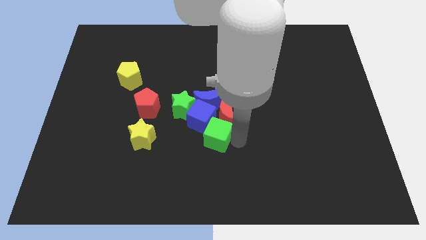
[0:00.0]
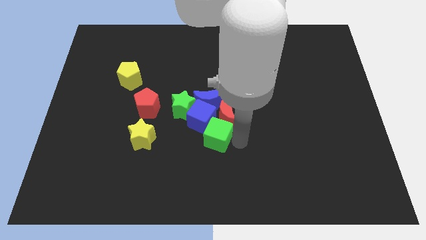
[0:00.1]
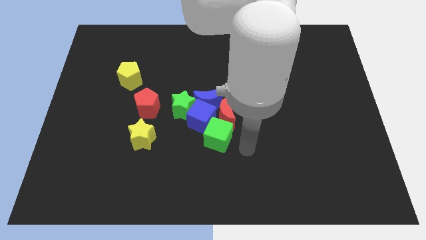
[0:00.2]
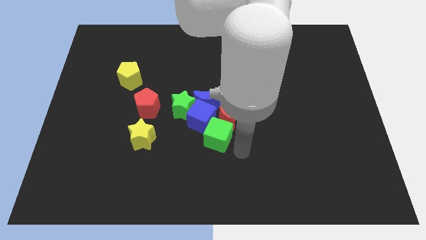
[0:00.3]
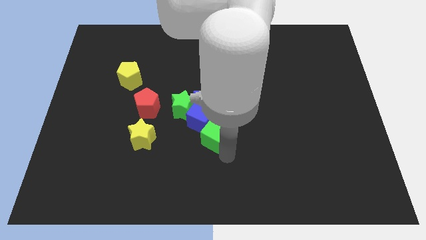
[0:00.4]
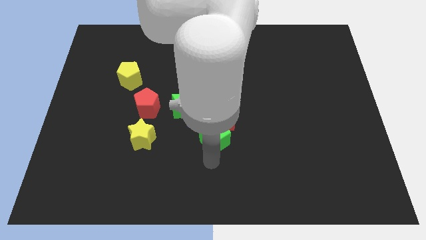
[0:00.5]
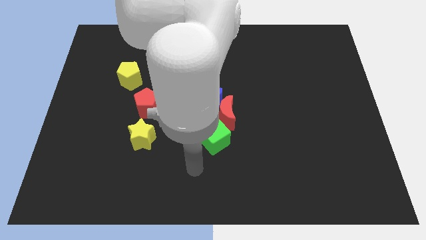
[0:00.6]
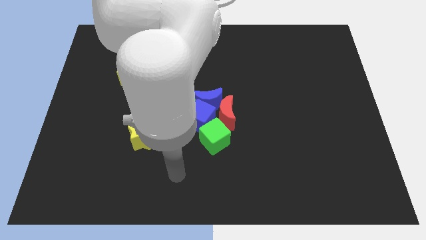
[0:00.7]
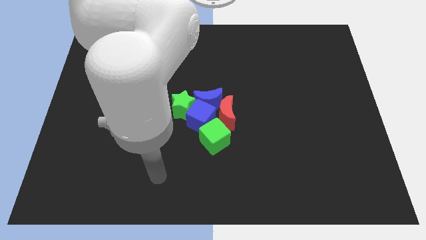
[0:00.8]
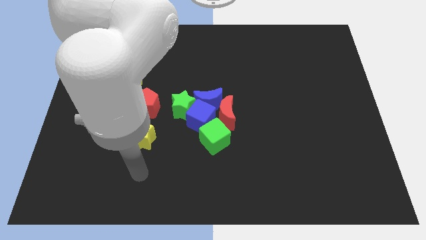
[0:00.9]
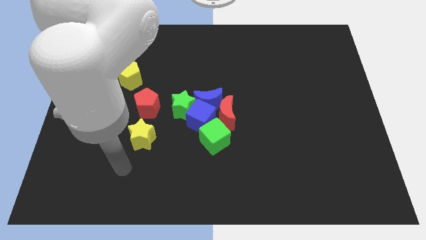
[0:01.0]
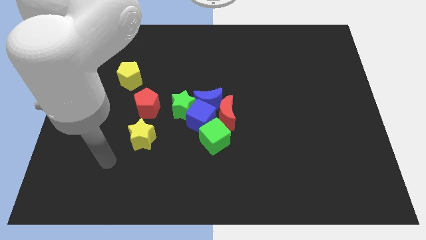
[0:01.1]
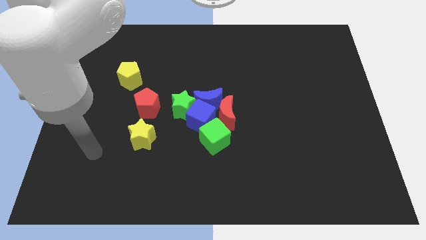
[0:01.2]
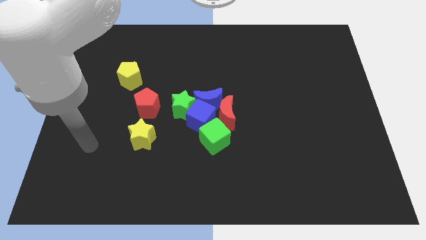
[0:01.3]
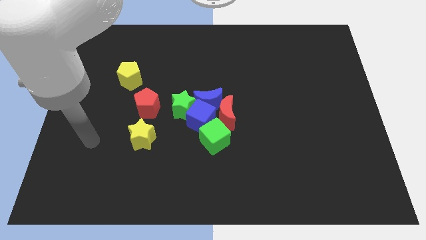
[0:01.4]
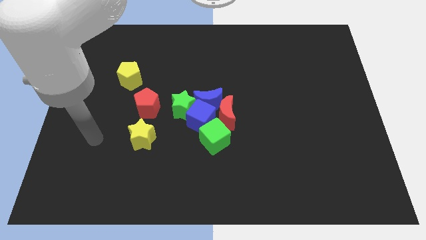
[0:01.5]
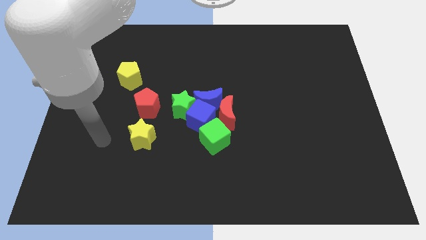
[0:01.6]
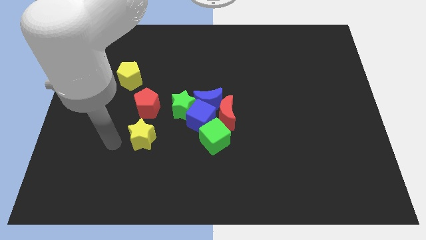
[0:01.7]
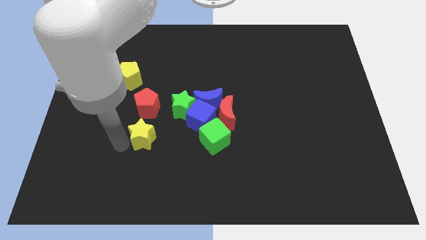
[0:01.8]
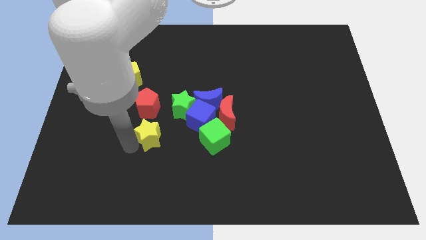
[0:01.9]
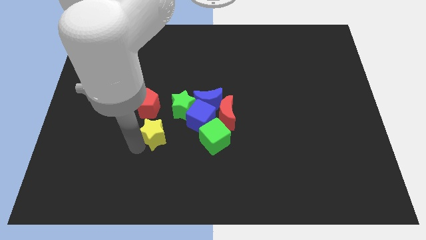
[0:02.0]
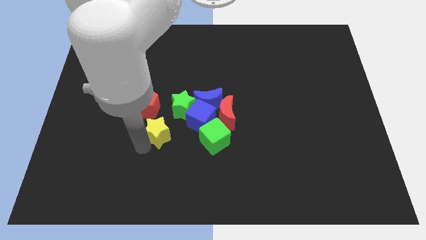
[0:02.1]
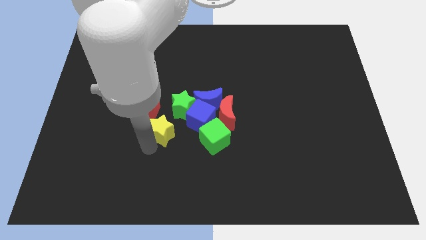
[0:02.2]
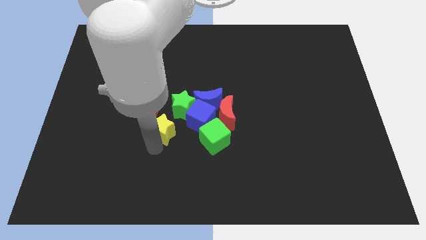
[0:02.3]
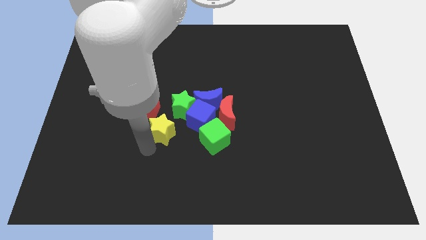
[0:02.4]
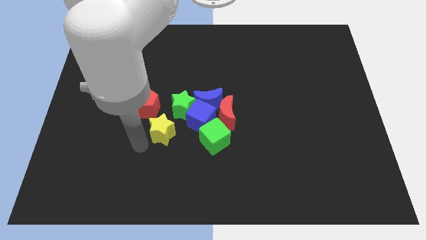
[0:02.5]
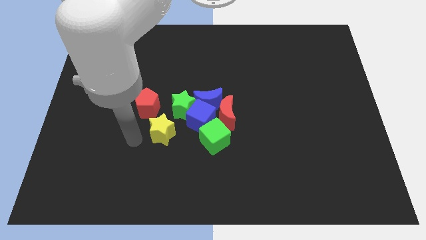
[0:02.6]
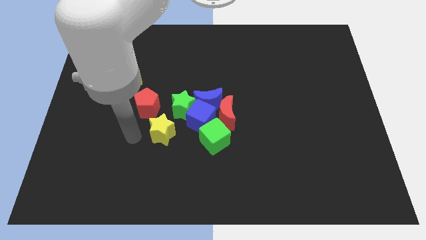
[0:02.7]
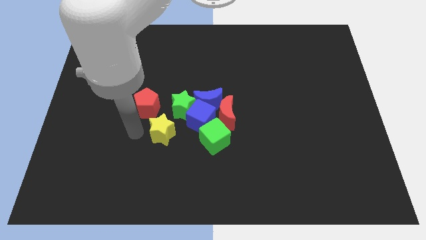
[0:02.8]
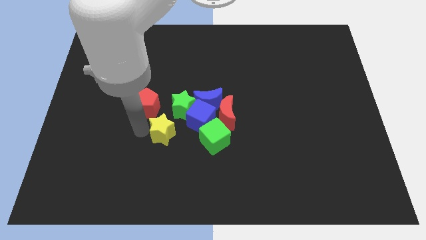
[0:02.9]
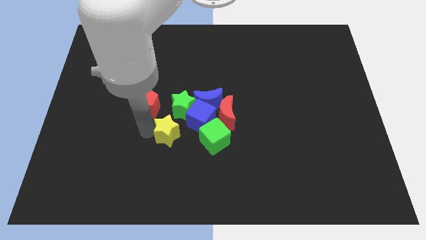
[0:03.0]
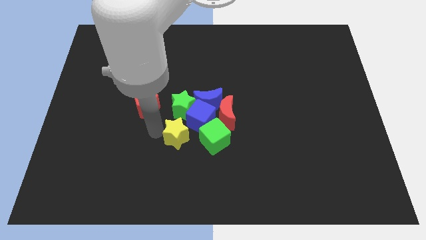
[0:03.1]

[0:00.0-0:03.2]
push the yellow star below to the green cube

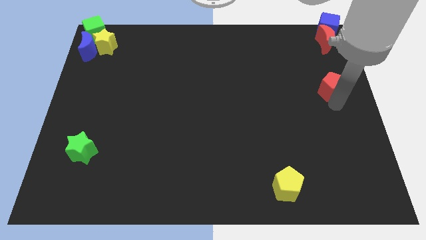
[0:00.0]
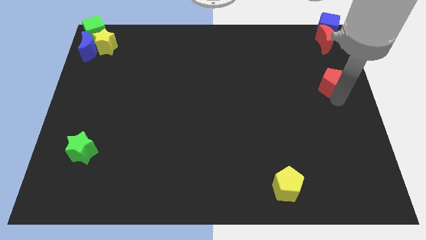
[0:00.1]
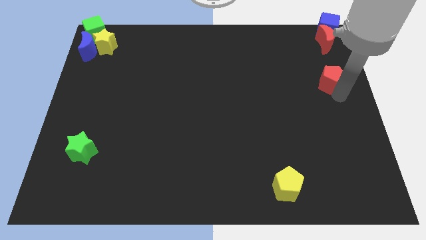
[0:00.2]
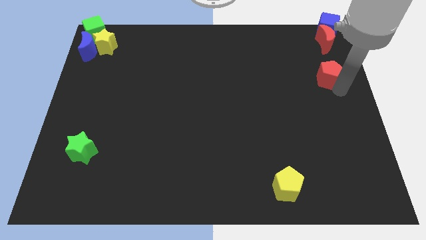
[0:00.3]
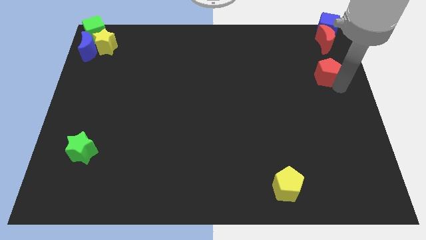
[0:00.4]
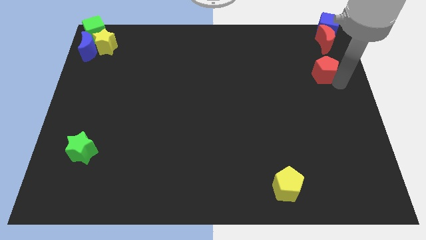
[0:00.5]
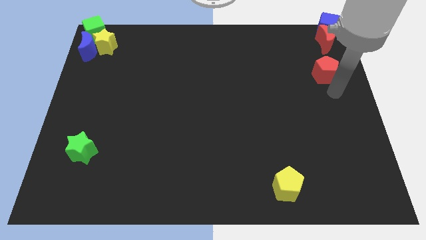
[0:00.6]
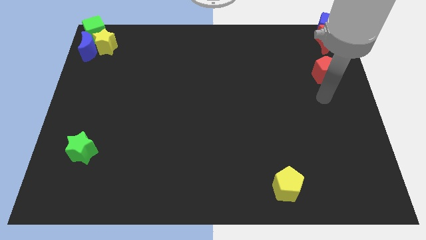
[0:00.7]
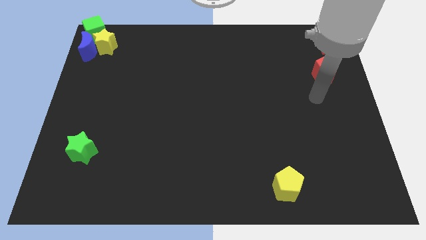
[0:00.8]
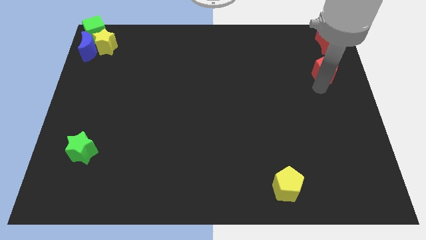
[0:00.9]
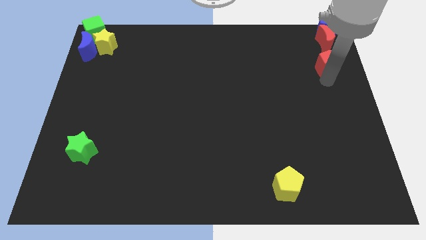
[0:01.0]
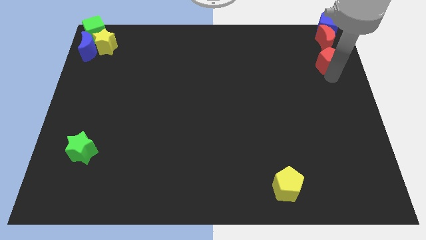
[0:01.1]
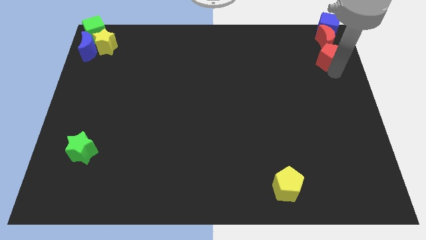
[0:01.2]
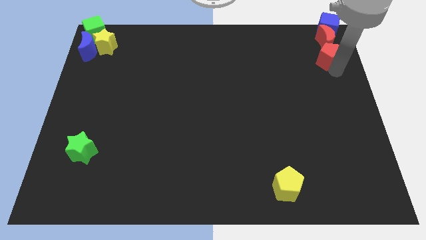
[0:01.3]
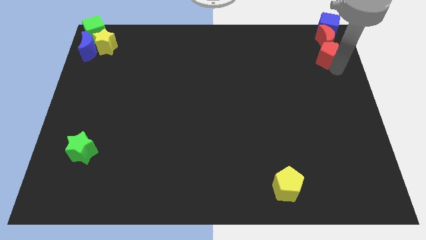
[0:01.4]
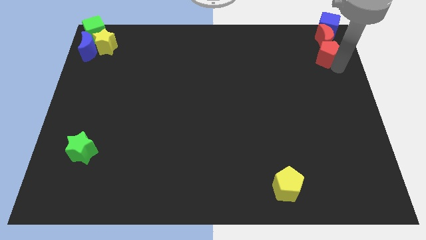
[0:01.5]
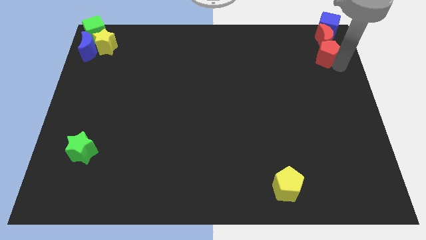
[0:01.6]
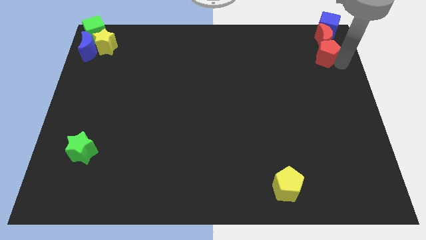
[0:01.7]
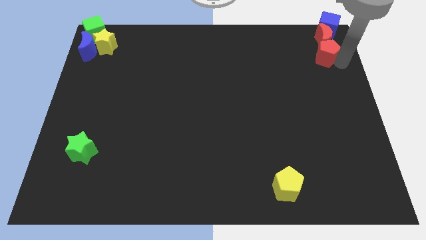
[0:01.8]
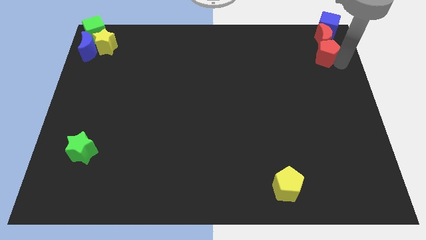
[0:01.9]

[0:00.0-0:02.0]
place the red pentagon at the bottom of the red crescent

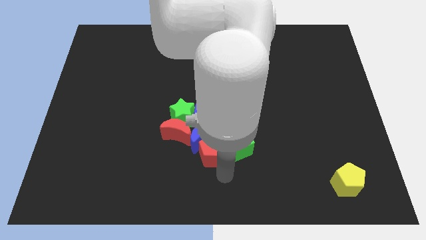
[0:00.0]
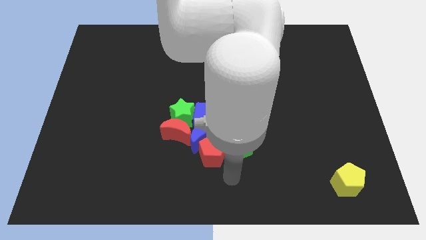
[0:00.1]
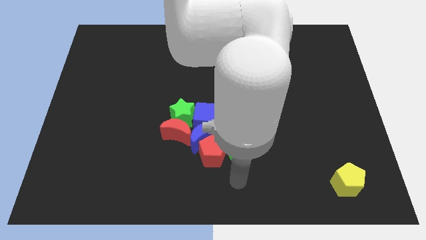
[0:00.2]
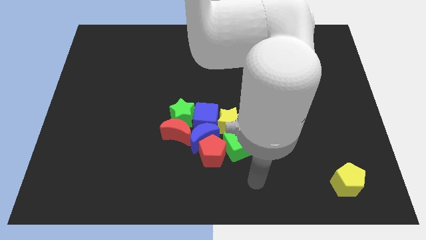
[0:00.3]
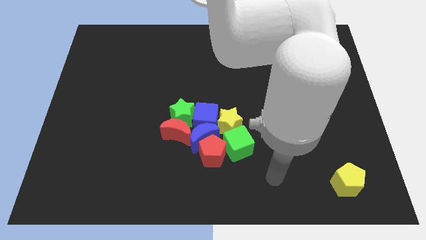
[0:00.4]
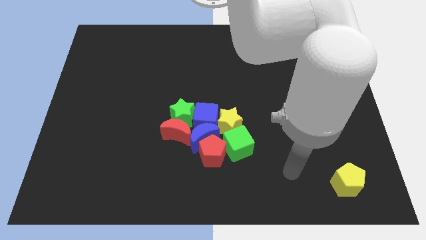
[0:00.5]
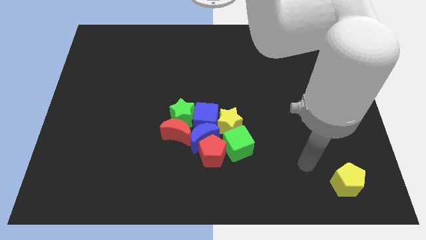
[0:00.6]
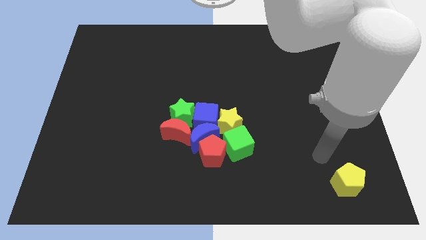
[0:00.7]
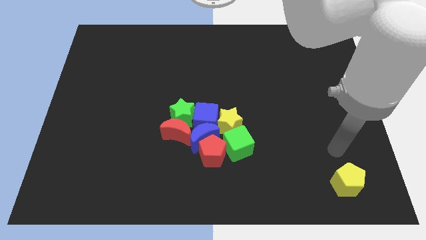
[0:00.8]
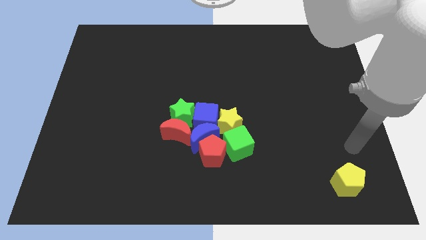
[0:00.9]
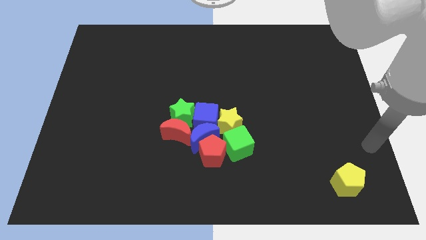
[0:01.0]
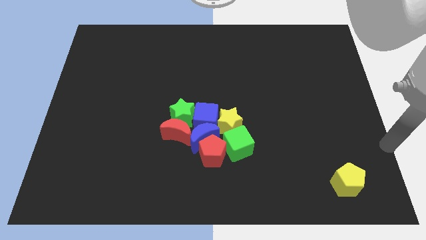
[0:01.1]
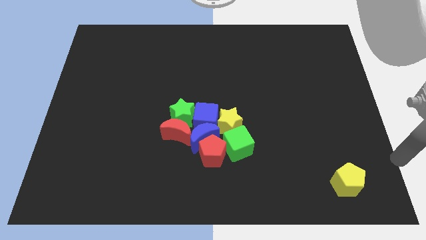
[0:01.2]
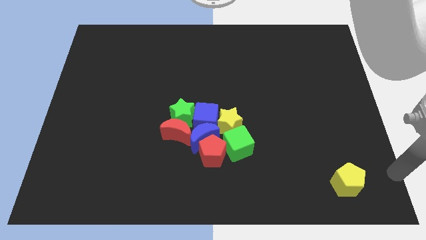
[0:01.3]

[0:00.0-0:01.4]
move the arm from bottom center to bottom right of the board

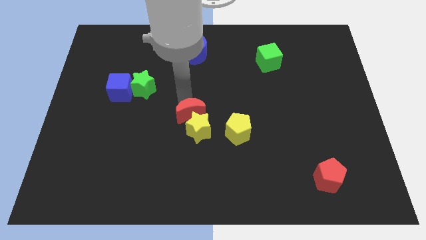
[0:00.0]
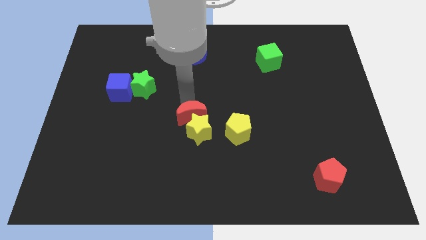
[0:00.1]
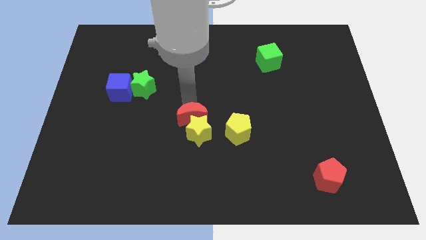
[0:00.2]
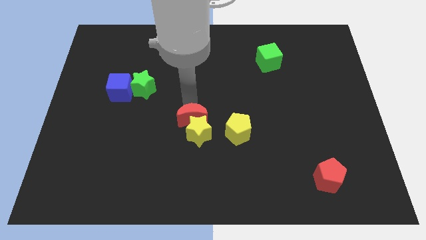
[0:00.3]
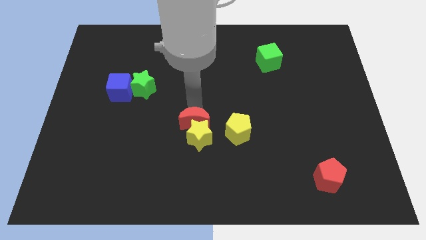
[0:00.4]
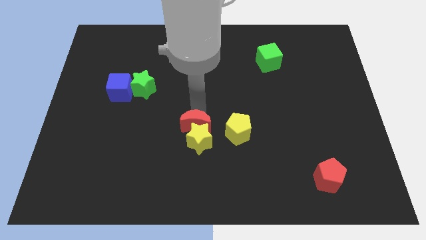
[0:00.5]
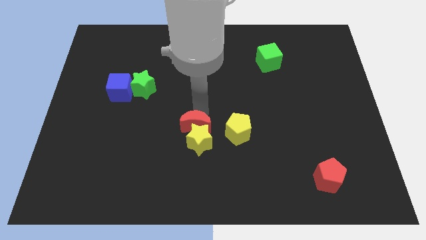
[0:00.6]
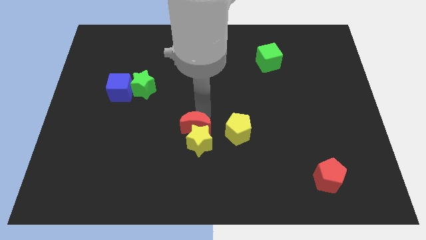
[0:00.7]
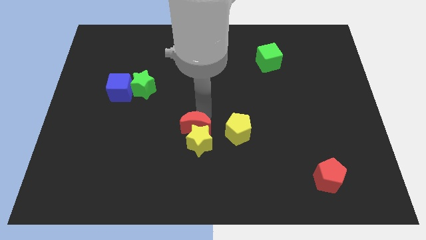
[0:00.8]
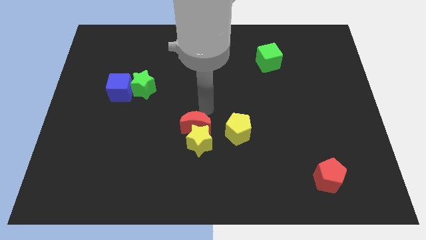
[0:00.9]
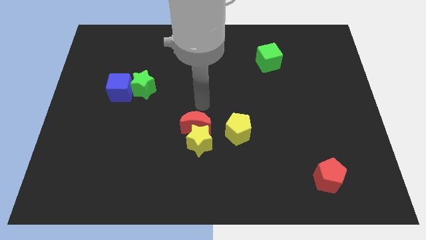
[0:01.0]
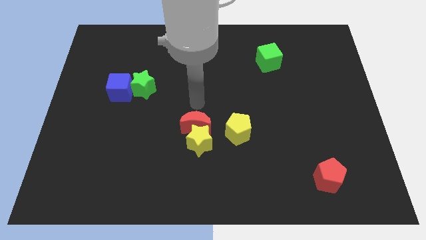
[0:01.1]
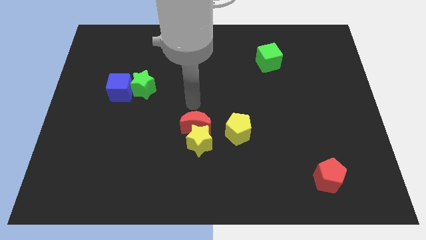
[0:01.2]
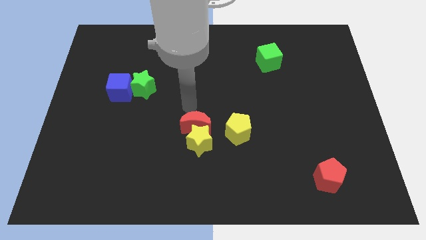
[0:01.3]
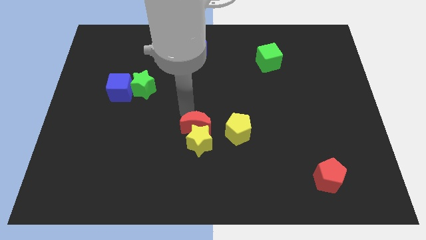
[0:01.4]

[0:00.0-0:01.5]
put the red crescent and yellow star to the left of the yellow pentagon

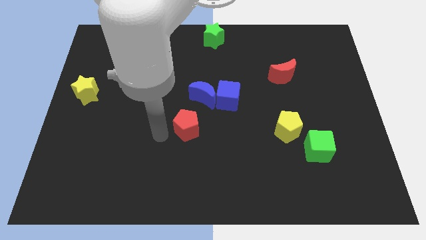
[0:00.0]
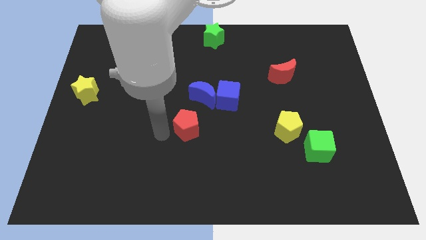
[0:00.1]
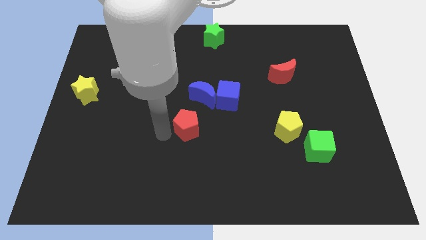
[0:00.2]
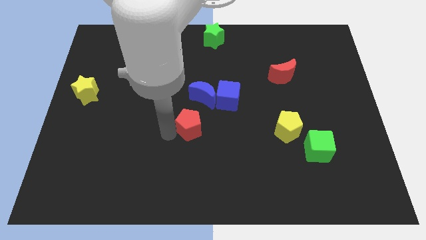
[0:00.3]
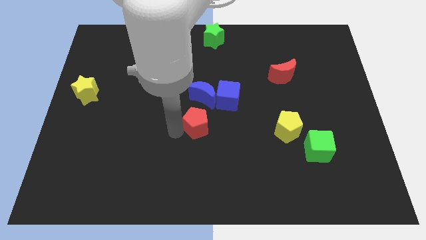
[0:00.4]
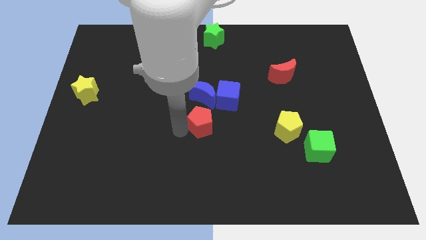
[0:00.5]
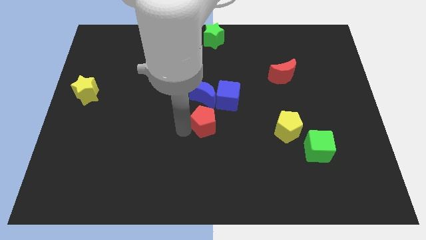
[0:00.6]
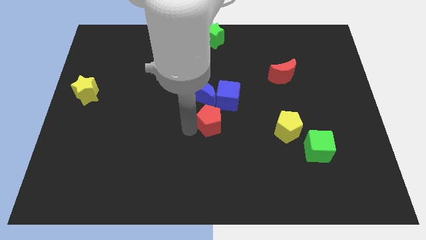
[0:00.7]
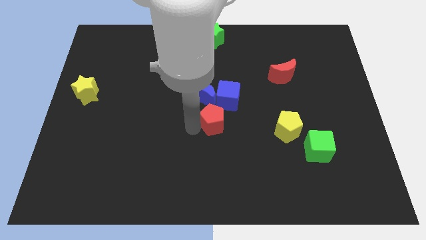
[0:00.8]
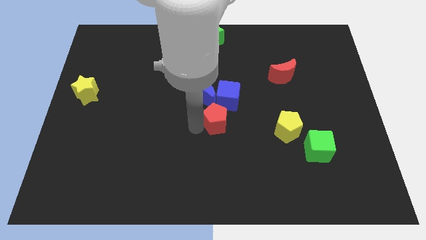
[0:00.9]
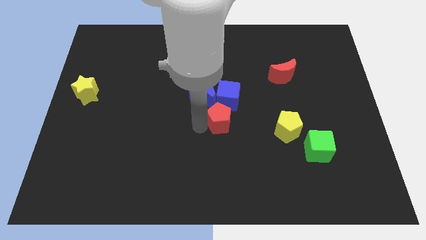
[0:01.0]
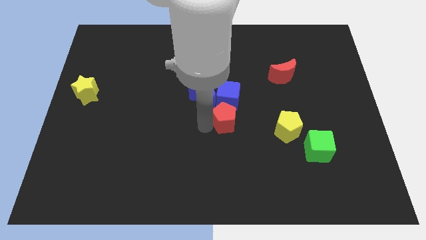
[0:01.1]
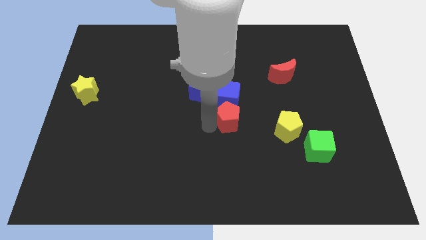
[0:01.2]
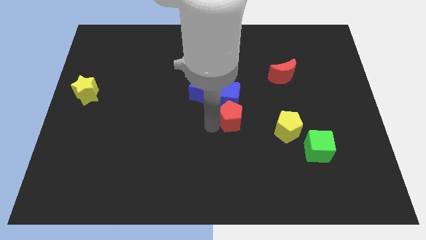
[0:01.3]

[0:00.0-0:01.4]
move the red pentagon to the bottom of the blue cube
